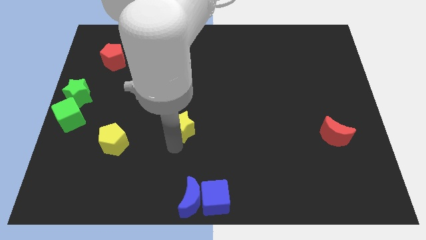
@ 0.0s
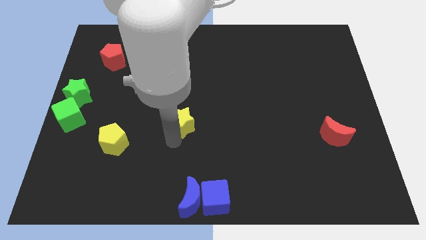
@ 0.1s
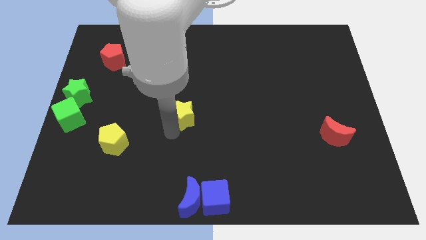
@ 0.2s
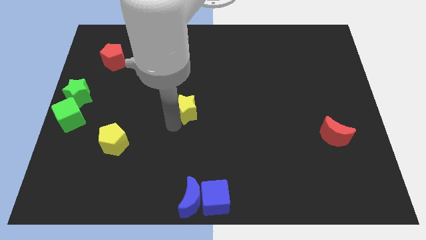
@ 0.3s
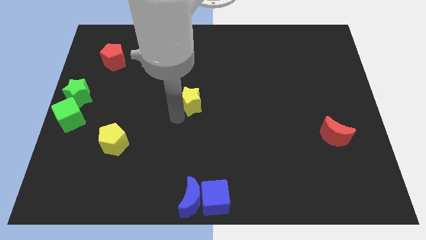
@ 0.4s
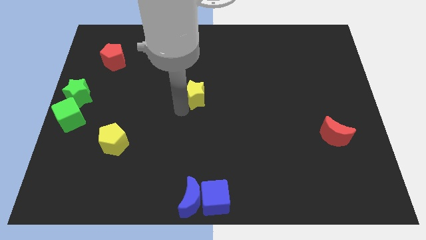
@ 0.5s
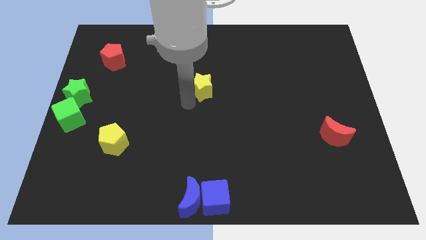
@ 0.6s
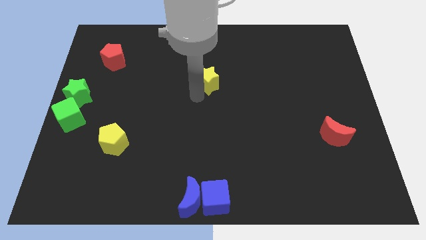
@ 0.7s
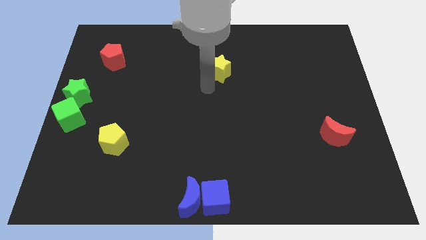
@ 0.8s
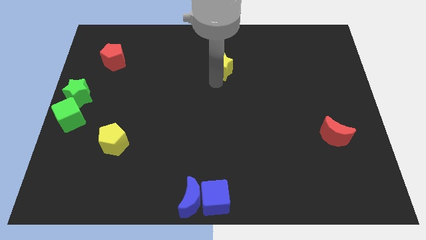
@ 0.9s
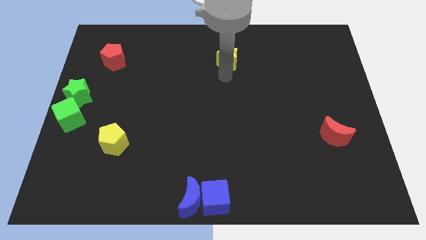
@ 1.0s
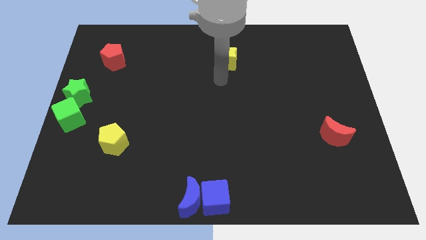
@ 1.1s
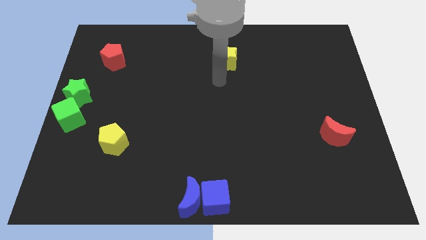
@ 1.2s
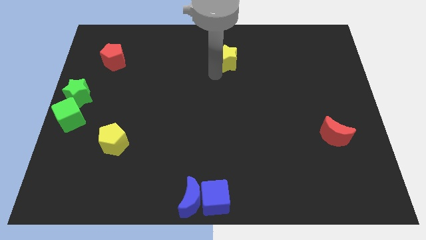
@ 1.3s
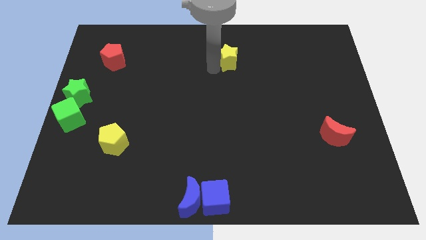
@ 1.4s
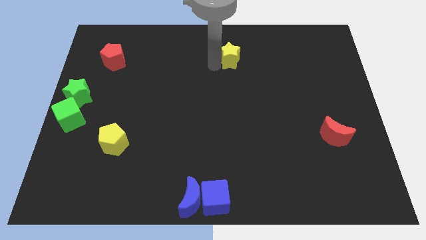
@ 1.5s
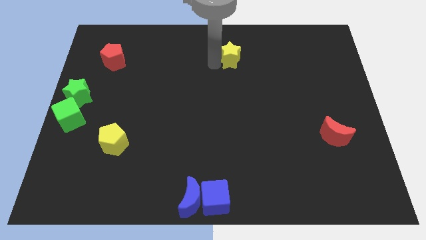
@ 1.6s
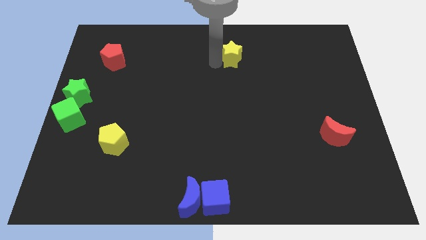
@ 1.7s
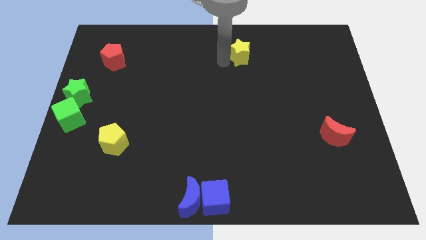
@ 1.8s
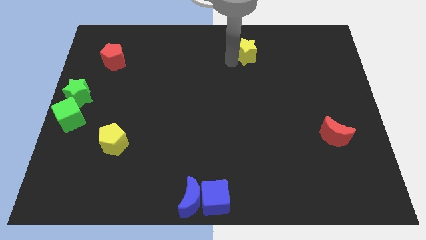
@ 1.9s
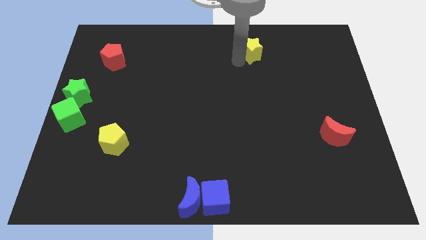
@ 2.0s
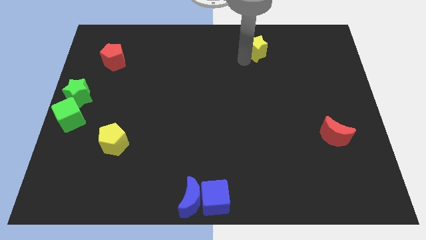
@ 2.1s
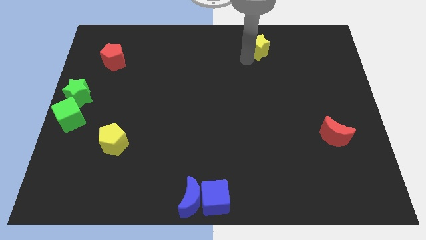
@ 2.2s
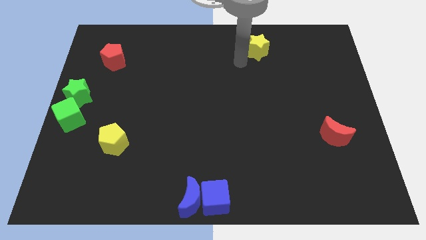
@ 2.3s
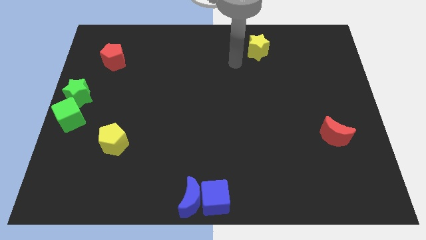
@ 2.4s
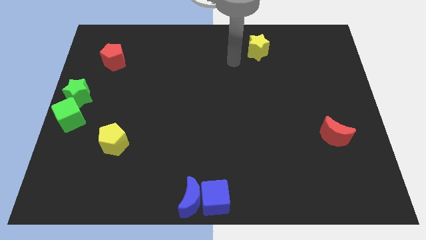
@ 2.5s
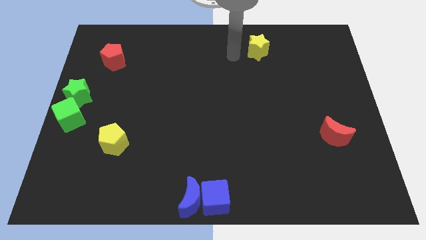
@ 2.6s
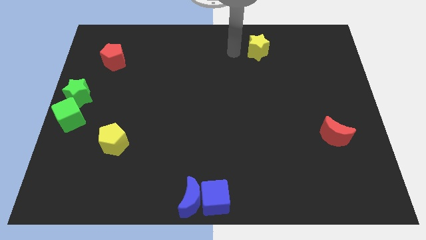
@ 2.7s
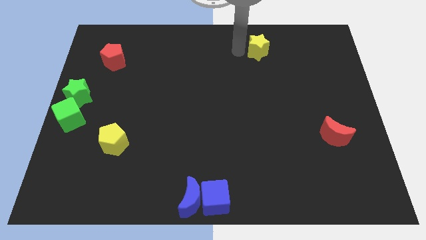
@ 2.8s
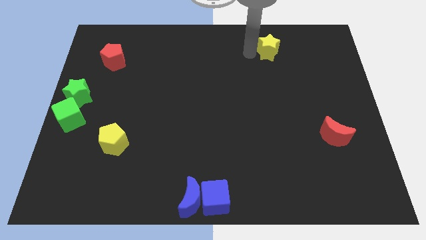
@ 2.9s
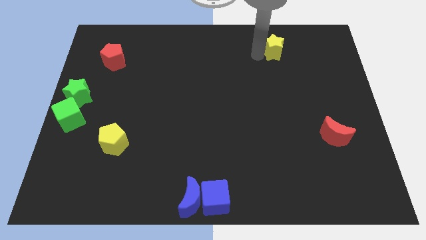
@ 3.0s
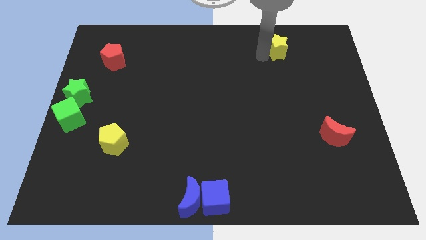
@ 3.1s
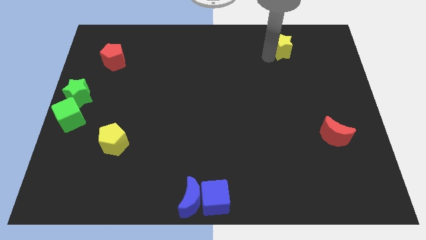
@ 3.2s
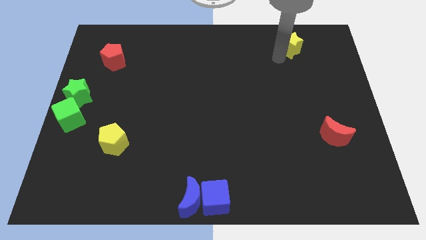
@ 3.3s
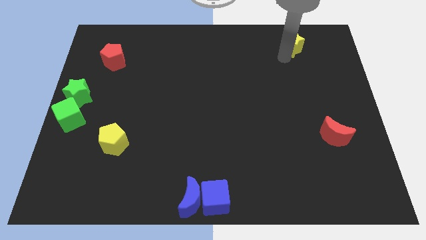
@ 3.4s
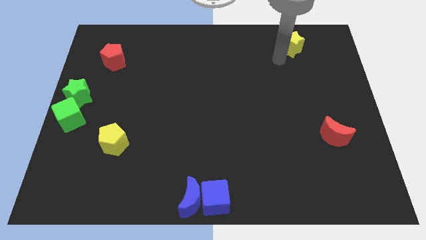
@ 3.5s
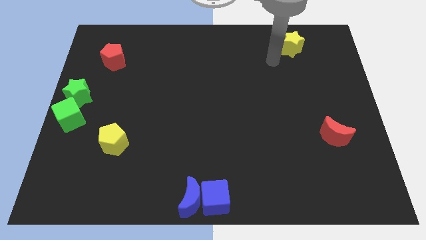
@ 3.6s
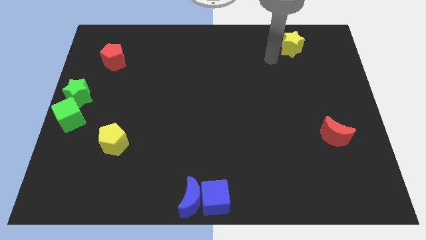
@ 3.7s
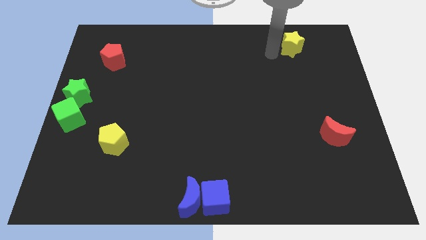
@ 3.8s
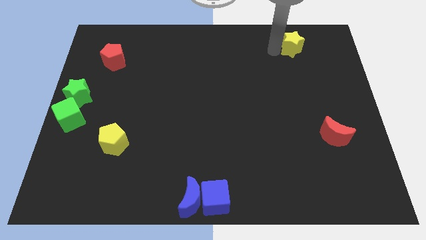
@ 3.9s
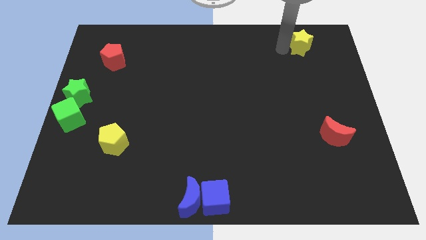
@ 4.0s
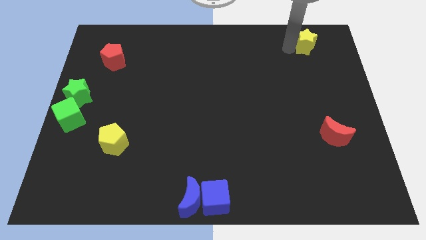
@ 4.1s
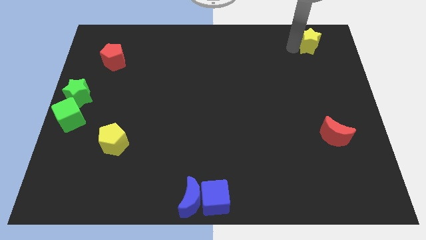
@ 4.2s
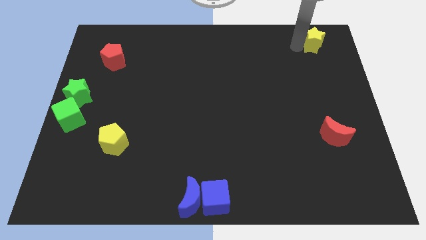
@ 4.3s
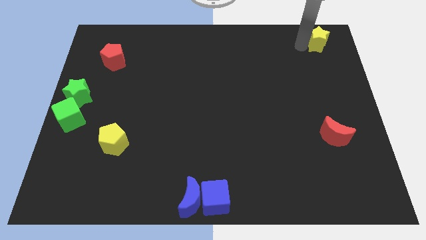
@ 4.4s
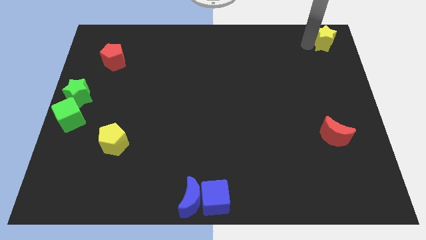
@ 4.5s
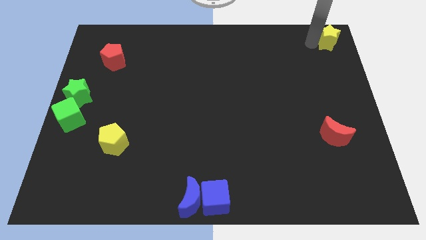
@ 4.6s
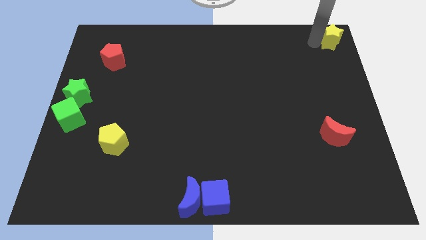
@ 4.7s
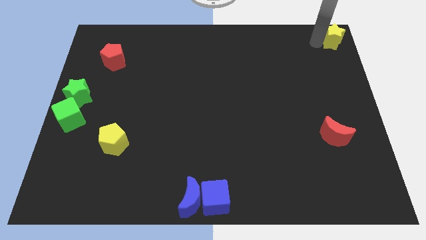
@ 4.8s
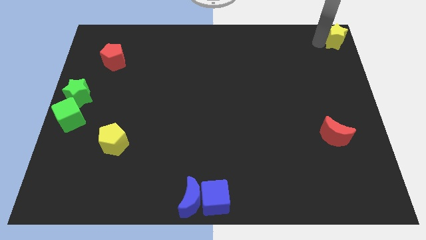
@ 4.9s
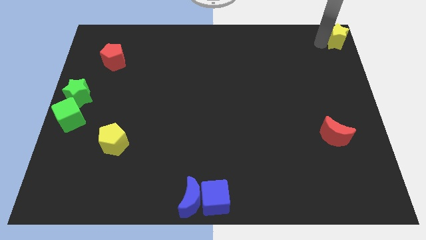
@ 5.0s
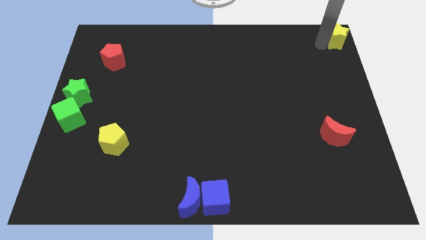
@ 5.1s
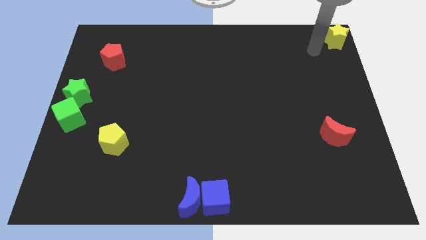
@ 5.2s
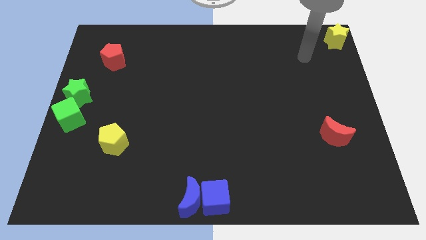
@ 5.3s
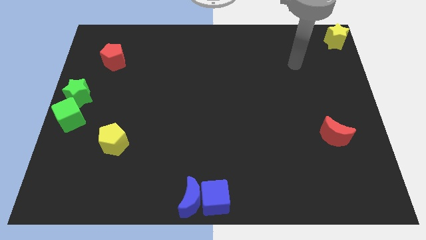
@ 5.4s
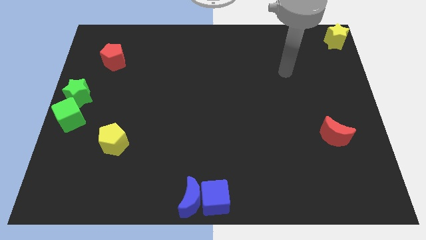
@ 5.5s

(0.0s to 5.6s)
push yellow star to the top right corner of the board

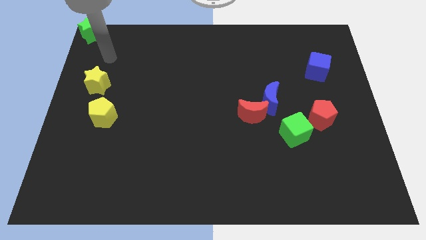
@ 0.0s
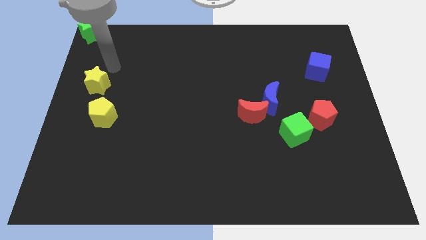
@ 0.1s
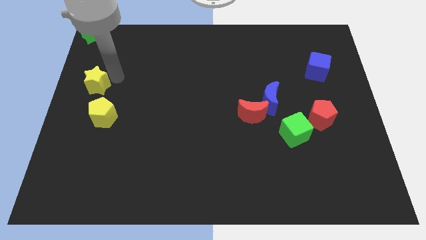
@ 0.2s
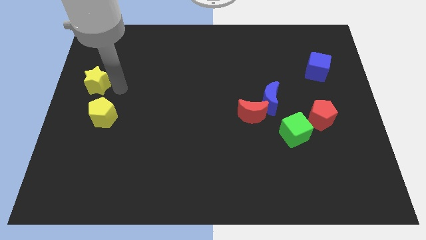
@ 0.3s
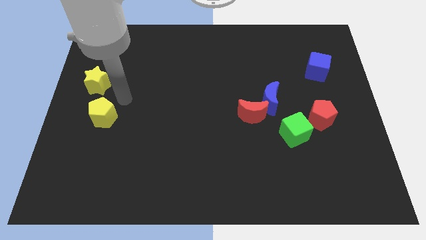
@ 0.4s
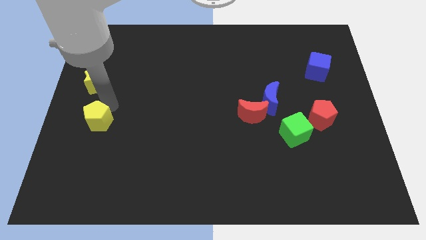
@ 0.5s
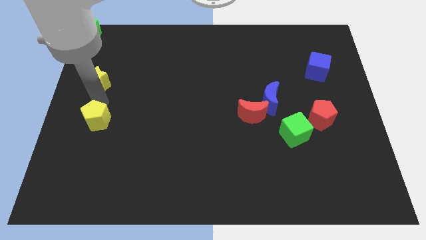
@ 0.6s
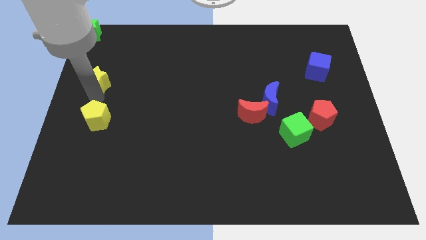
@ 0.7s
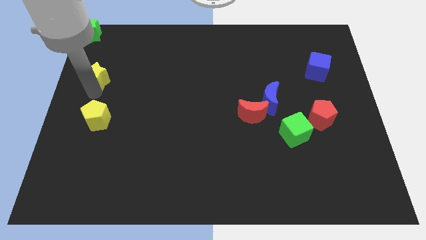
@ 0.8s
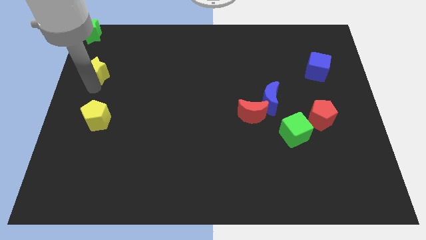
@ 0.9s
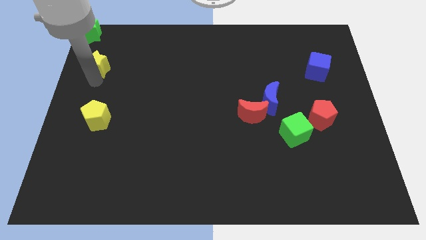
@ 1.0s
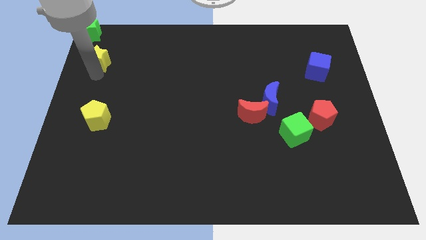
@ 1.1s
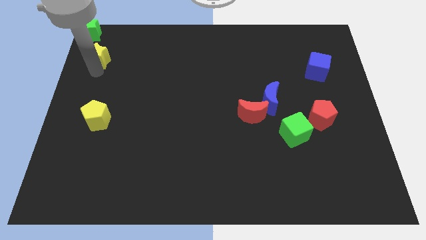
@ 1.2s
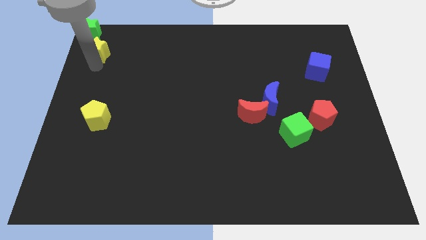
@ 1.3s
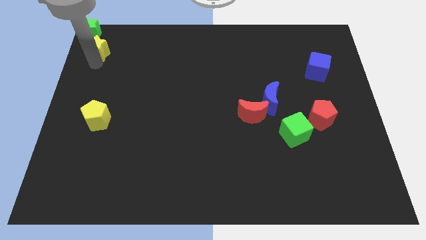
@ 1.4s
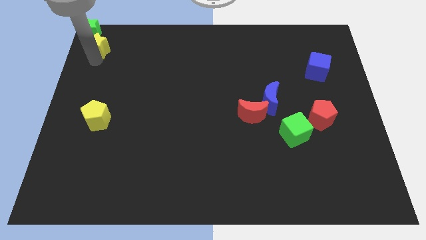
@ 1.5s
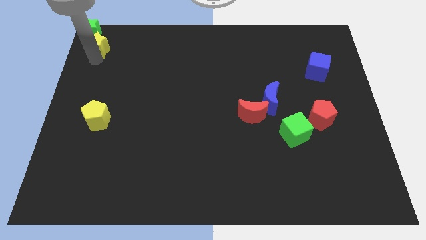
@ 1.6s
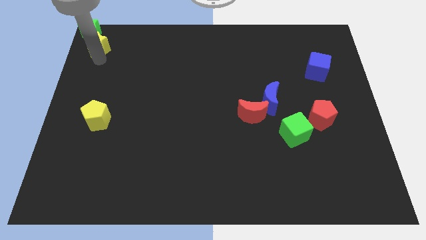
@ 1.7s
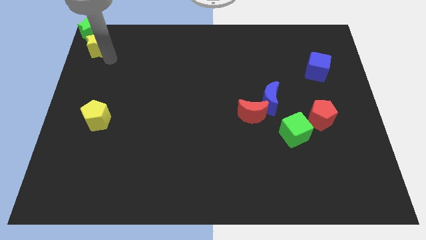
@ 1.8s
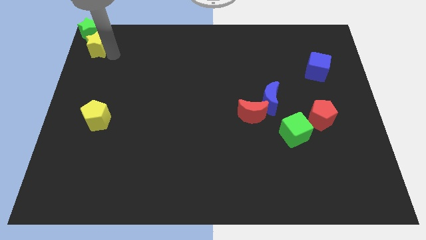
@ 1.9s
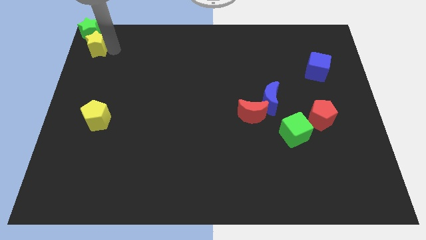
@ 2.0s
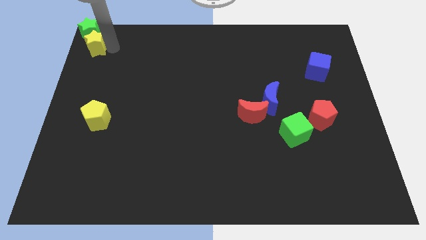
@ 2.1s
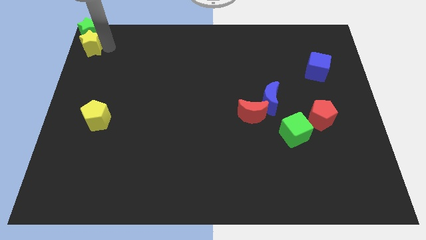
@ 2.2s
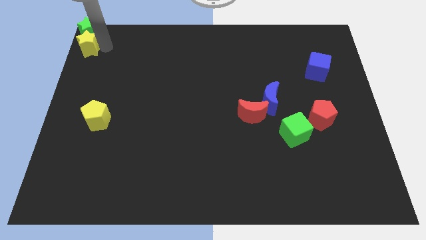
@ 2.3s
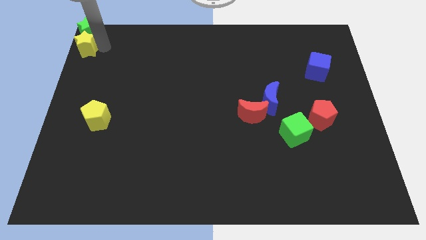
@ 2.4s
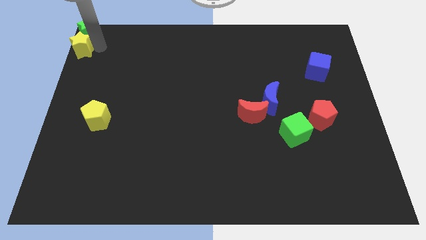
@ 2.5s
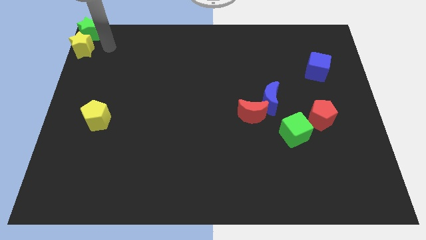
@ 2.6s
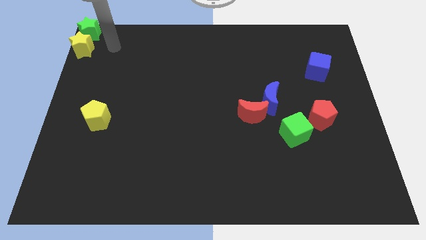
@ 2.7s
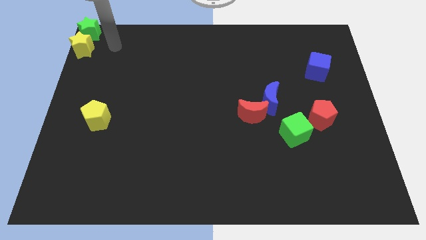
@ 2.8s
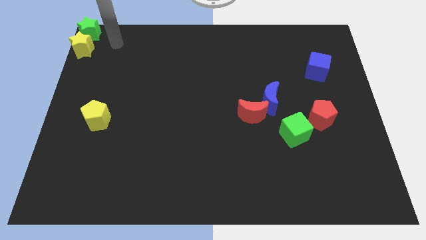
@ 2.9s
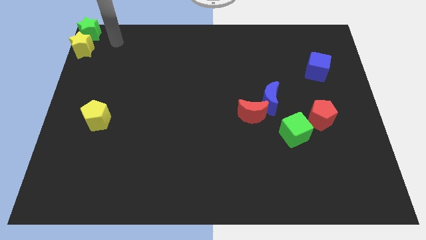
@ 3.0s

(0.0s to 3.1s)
place the yellow star below the bottom side of the green star
